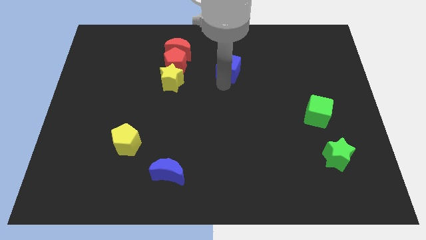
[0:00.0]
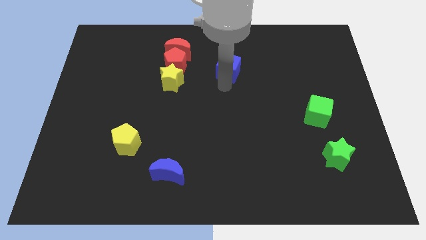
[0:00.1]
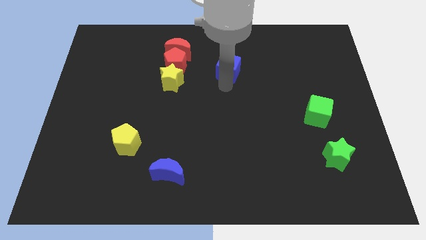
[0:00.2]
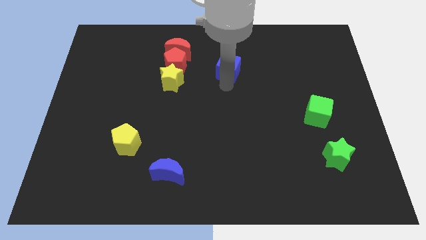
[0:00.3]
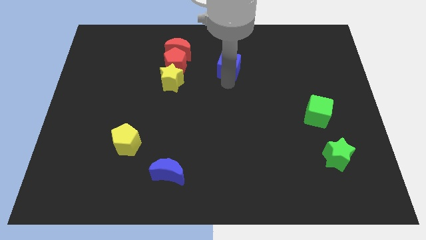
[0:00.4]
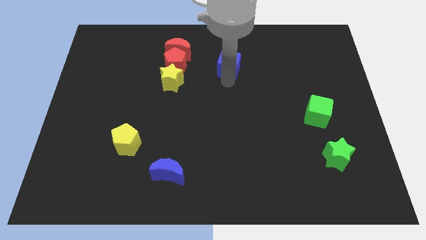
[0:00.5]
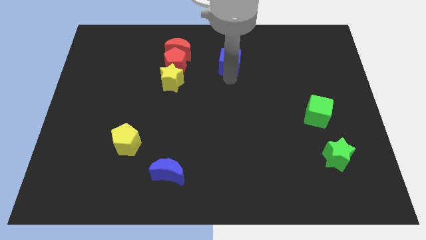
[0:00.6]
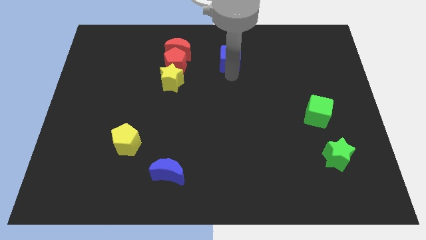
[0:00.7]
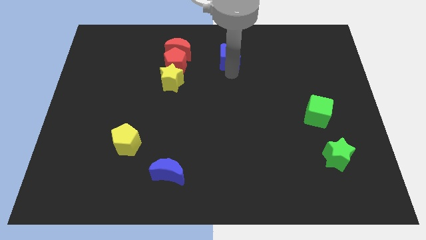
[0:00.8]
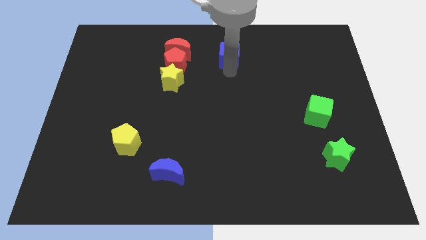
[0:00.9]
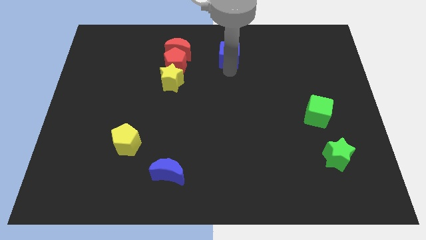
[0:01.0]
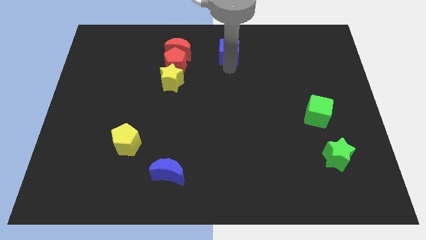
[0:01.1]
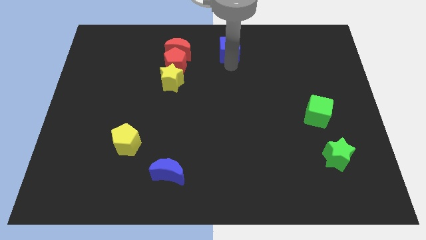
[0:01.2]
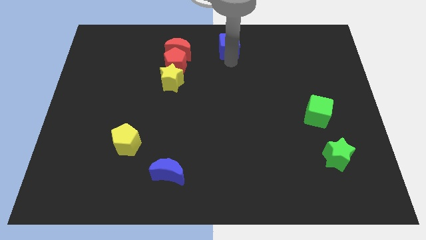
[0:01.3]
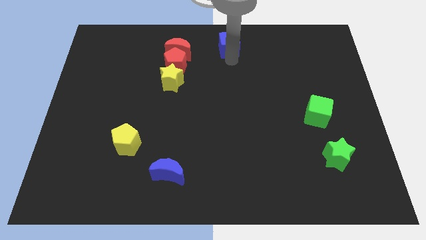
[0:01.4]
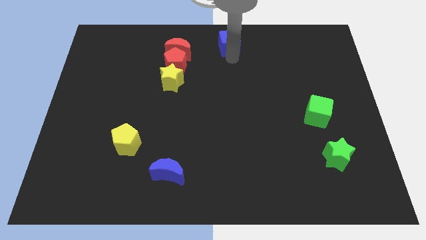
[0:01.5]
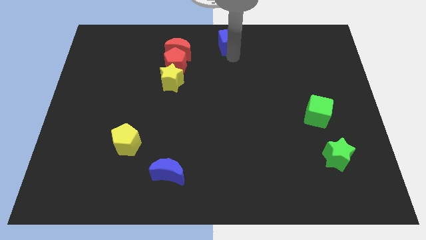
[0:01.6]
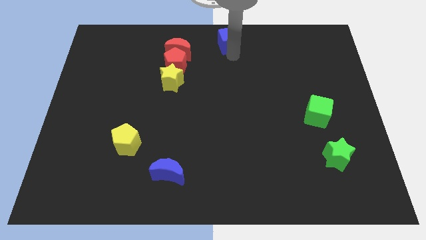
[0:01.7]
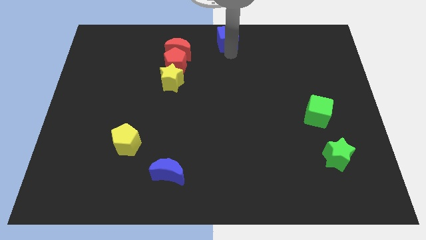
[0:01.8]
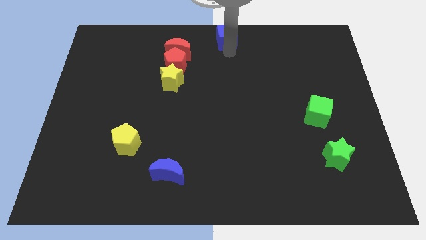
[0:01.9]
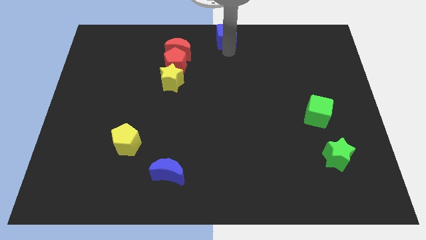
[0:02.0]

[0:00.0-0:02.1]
push the blue cube to the top centre of the board

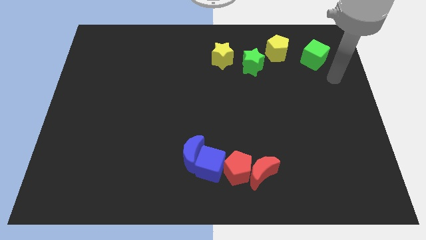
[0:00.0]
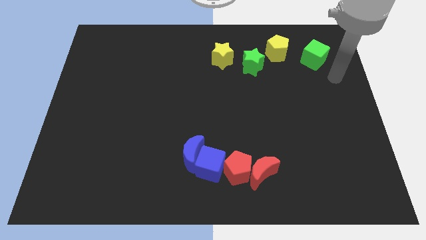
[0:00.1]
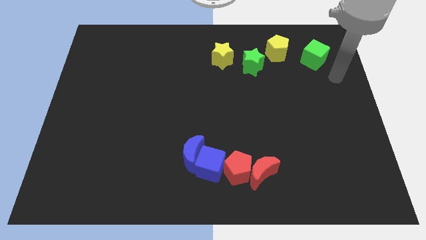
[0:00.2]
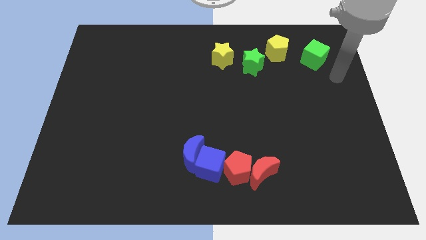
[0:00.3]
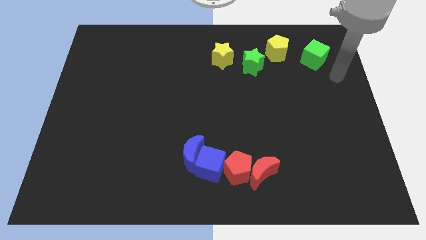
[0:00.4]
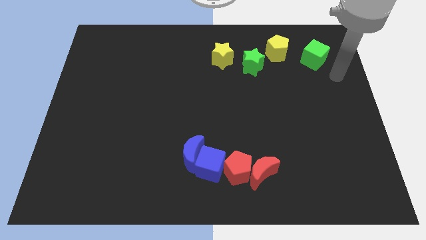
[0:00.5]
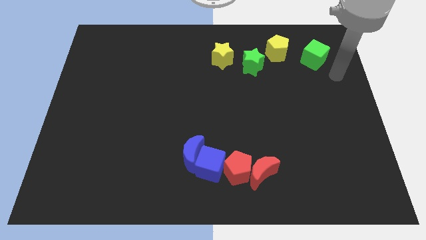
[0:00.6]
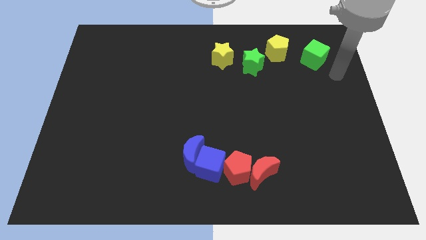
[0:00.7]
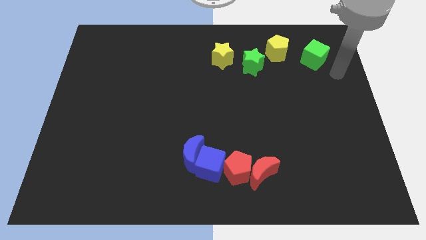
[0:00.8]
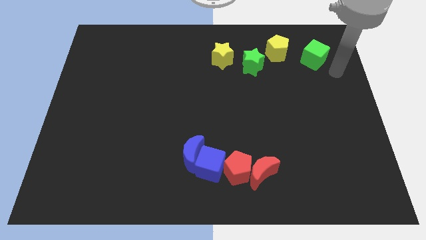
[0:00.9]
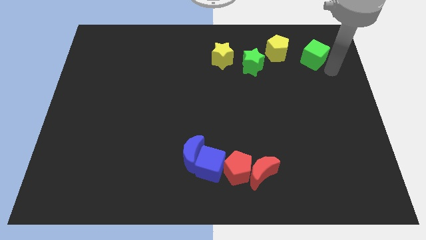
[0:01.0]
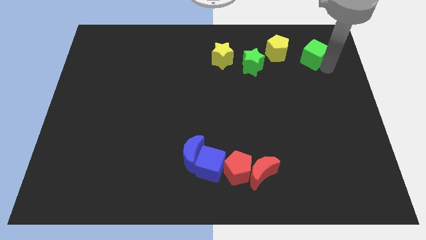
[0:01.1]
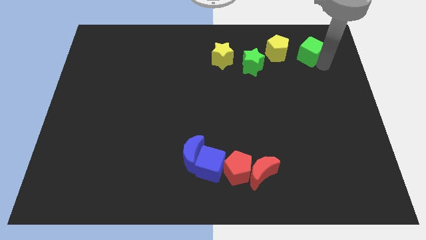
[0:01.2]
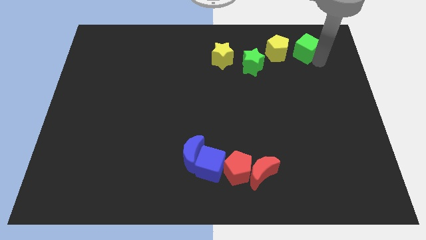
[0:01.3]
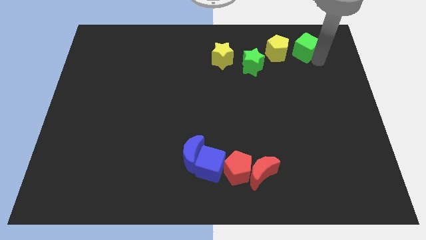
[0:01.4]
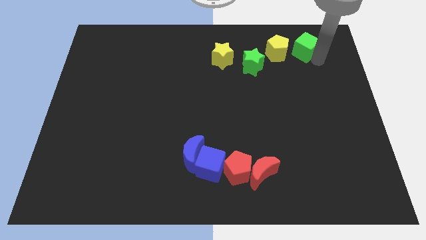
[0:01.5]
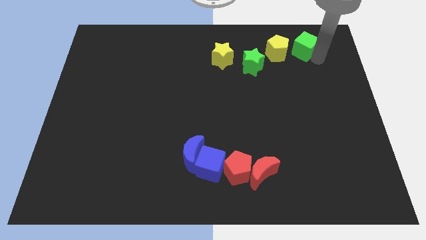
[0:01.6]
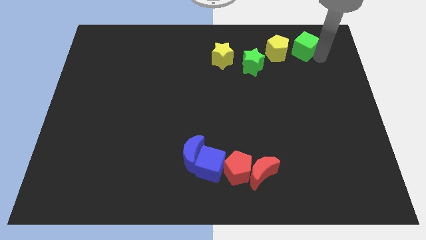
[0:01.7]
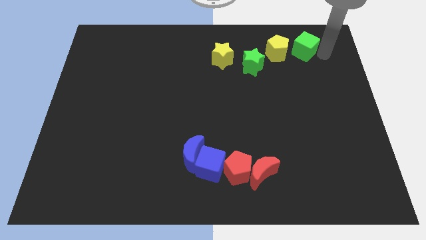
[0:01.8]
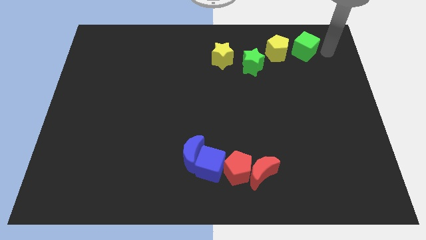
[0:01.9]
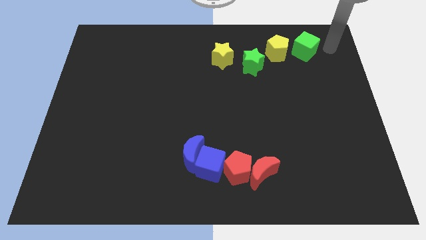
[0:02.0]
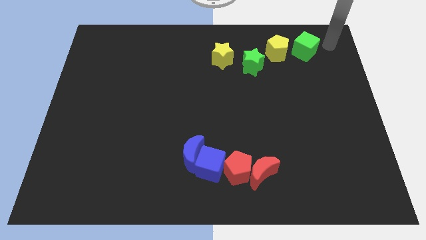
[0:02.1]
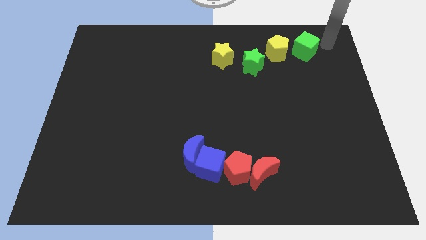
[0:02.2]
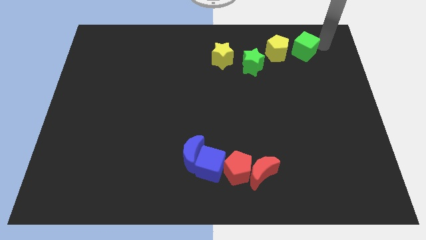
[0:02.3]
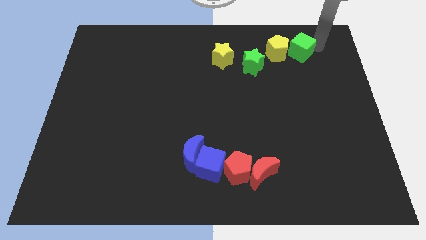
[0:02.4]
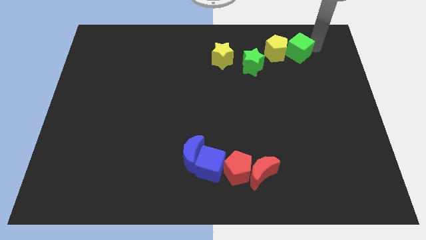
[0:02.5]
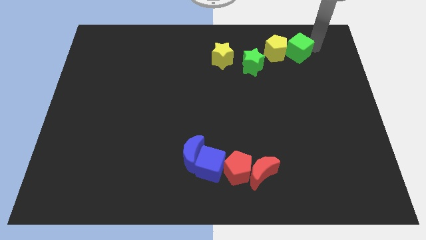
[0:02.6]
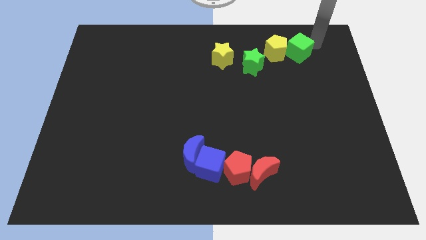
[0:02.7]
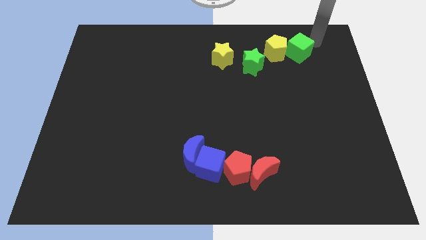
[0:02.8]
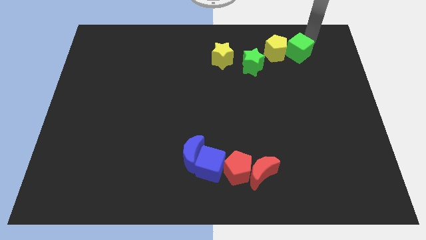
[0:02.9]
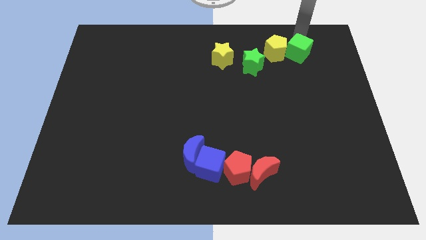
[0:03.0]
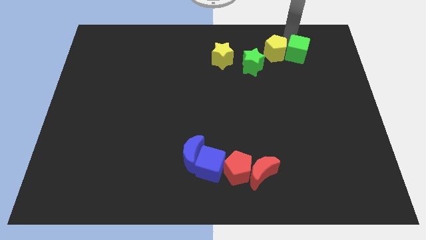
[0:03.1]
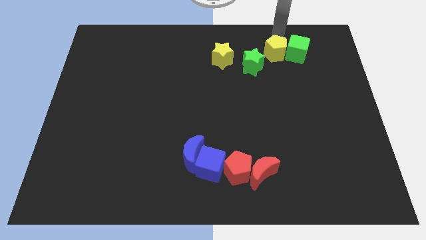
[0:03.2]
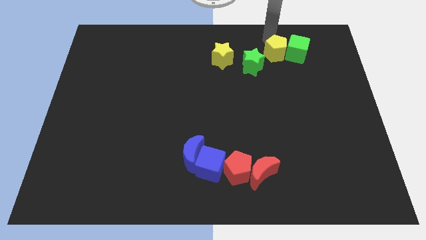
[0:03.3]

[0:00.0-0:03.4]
move the green cube close to the right of the yellow pentagon

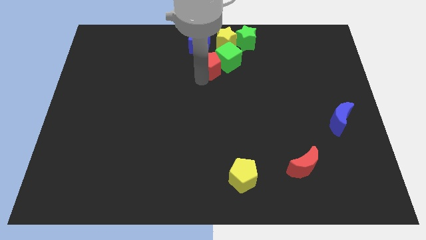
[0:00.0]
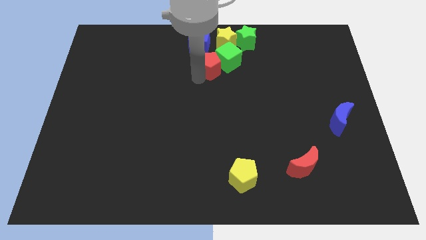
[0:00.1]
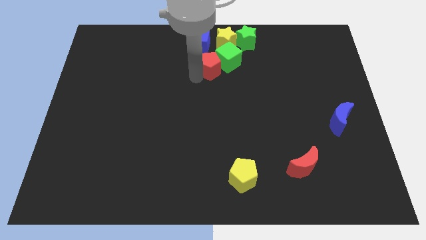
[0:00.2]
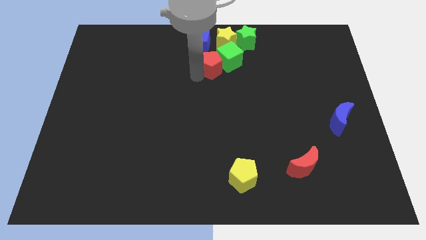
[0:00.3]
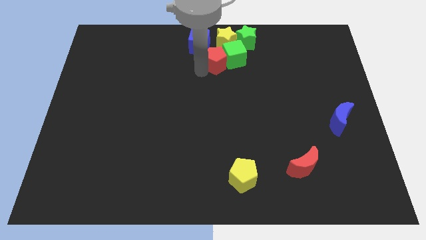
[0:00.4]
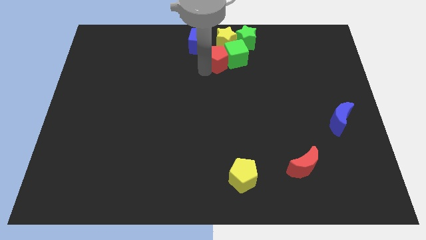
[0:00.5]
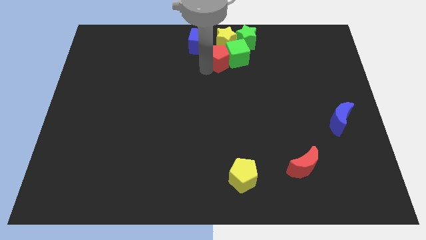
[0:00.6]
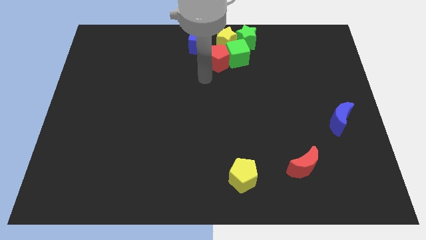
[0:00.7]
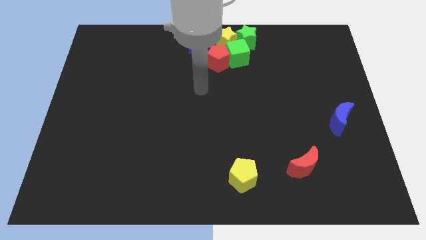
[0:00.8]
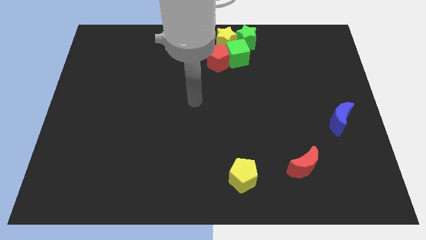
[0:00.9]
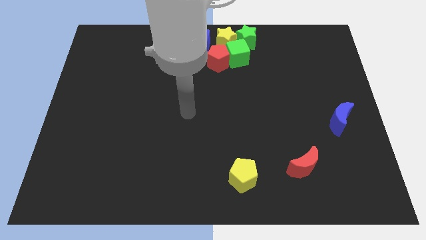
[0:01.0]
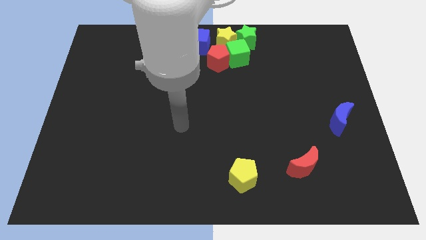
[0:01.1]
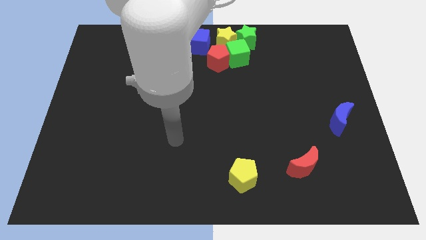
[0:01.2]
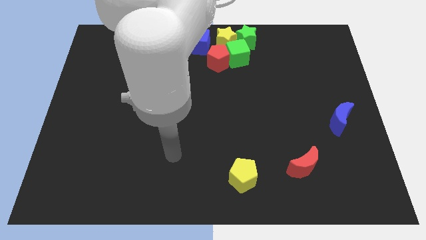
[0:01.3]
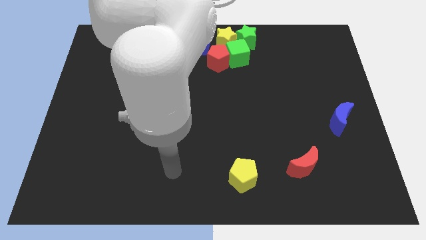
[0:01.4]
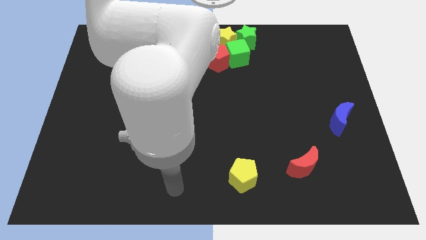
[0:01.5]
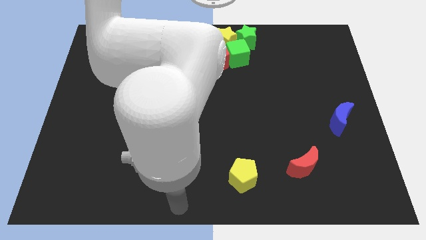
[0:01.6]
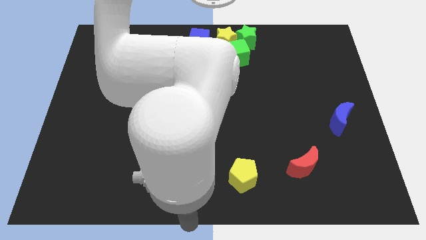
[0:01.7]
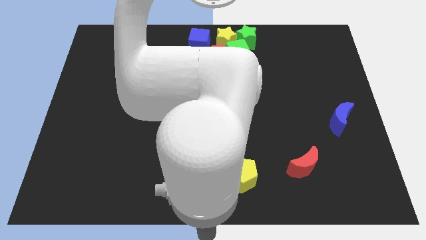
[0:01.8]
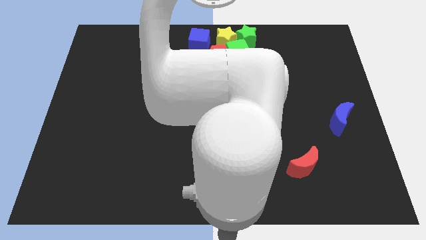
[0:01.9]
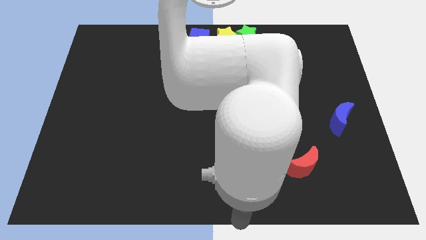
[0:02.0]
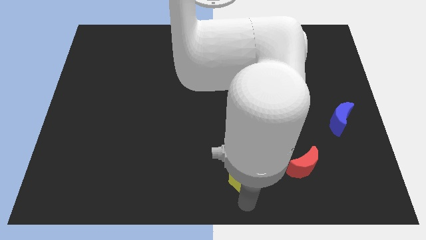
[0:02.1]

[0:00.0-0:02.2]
move your arm towards the yellow pentagon

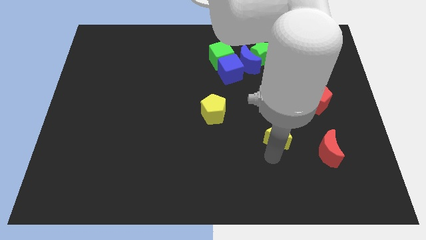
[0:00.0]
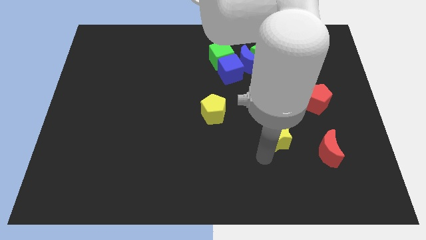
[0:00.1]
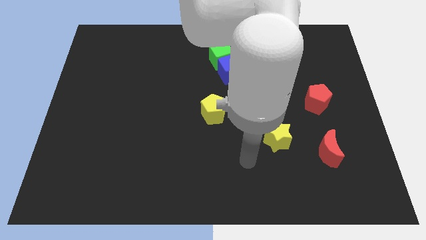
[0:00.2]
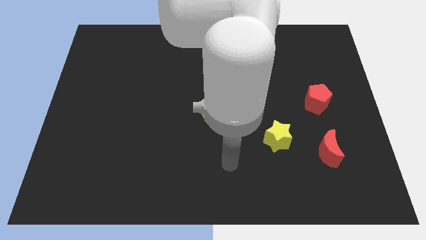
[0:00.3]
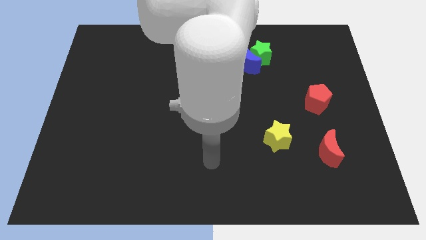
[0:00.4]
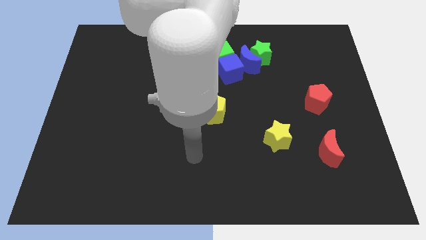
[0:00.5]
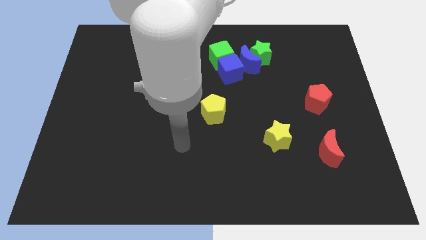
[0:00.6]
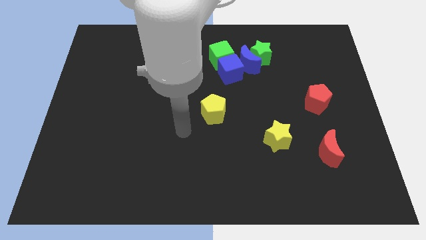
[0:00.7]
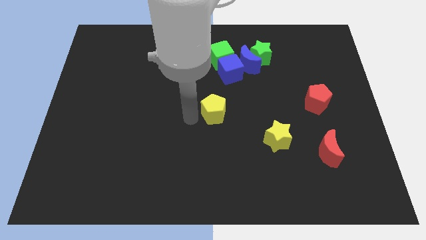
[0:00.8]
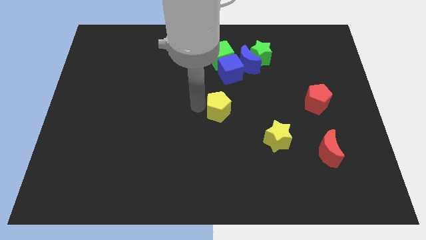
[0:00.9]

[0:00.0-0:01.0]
place the arm to the left of the yellow pentagon

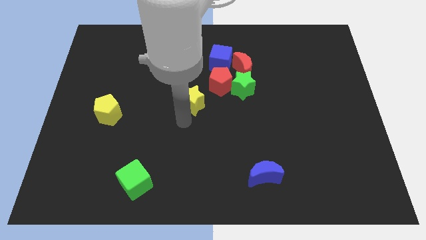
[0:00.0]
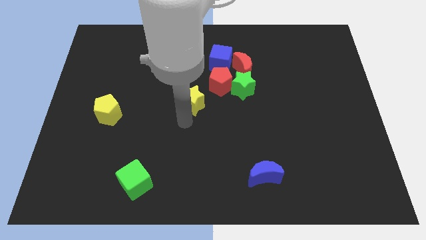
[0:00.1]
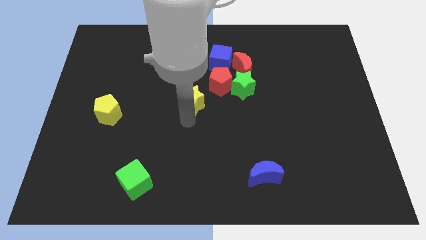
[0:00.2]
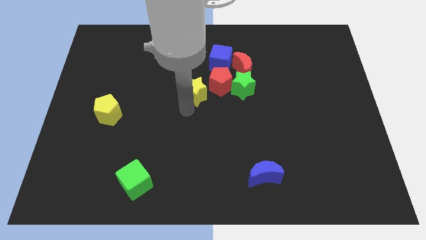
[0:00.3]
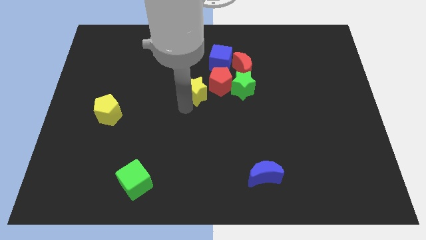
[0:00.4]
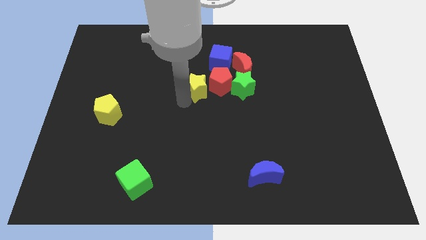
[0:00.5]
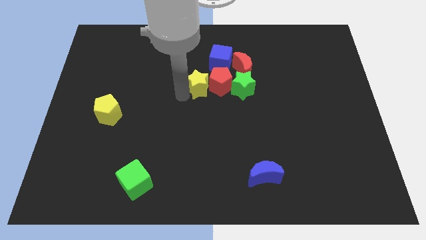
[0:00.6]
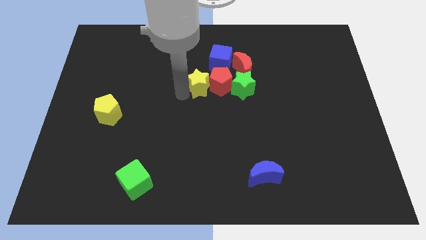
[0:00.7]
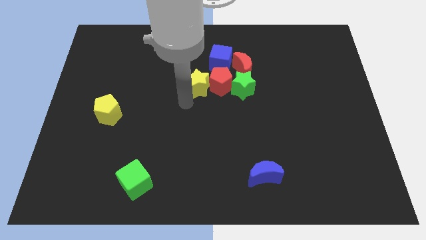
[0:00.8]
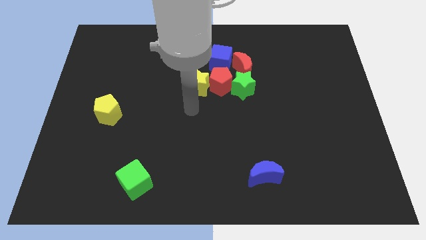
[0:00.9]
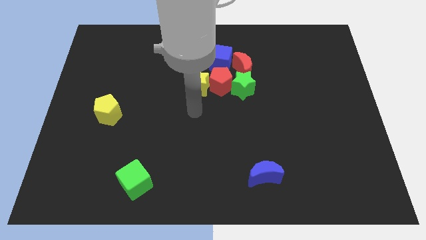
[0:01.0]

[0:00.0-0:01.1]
place the yellow star to the left of the red pentagon
